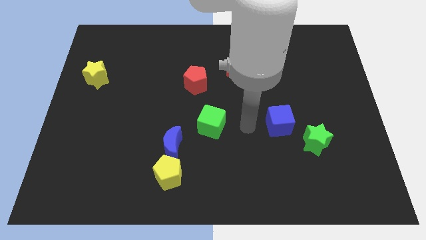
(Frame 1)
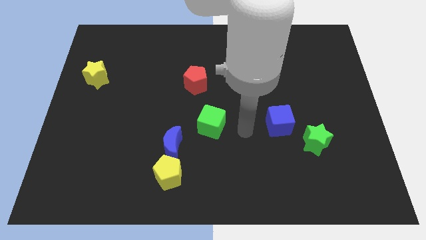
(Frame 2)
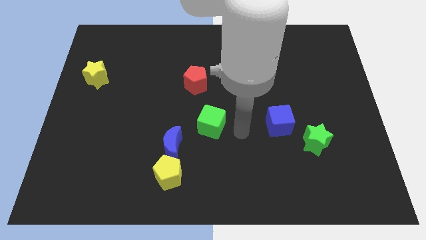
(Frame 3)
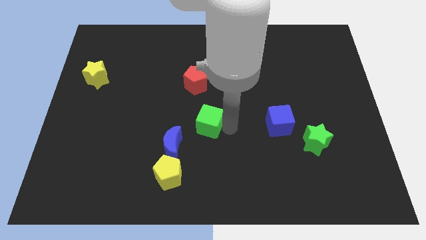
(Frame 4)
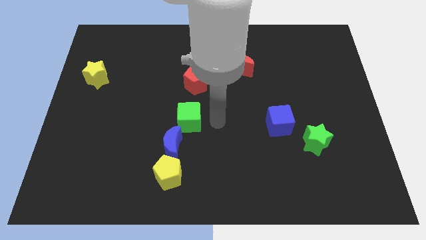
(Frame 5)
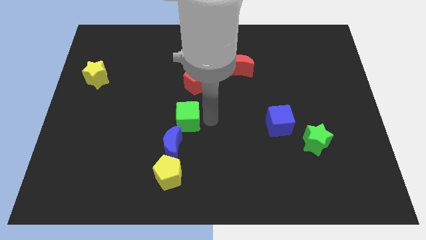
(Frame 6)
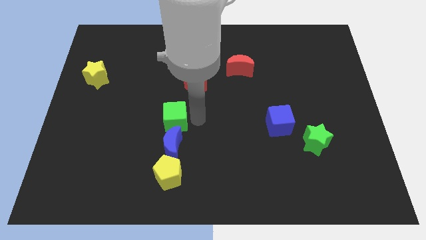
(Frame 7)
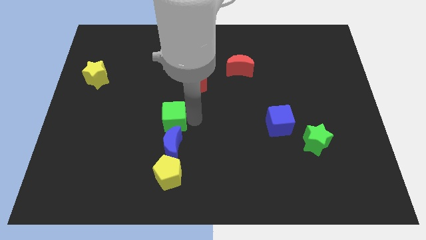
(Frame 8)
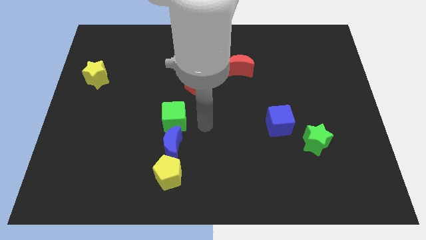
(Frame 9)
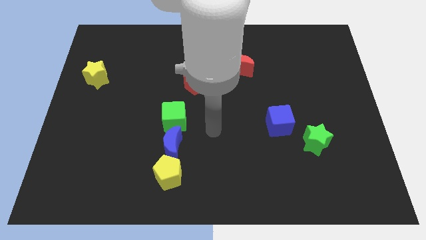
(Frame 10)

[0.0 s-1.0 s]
place the green cube at the top of blue moon

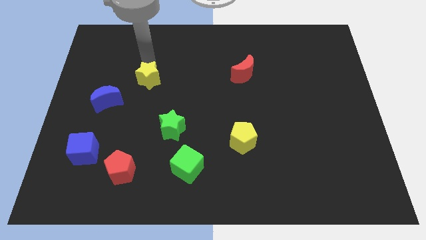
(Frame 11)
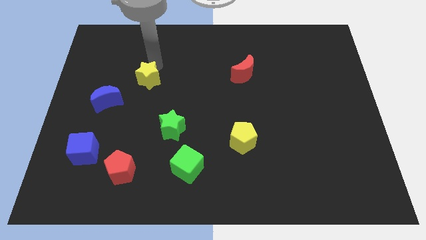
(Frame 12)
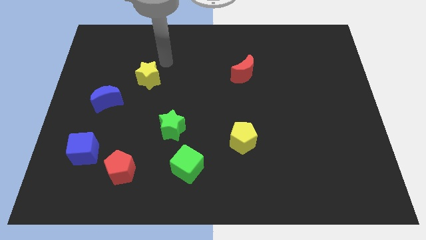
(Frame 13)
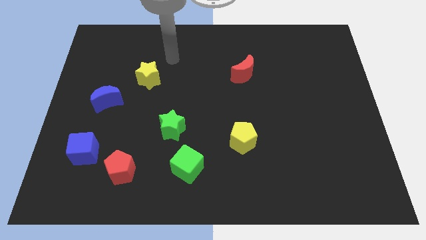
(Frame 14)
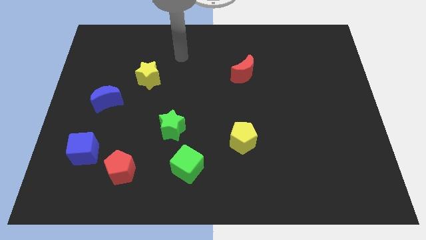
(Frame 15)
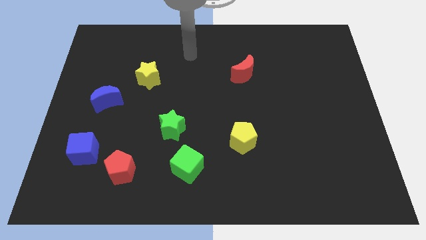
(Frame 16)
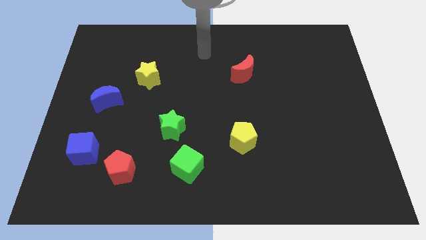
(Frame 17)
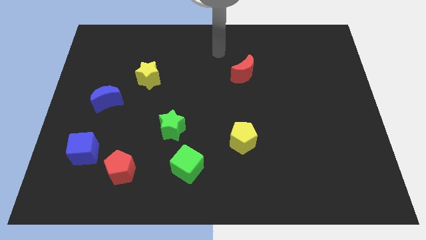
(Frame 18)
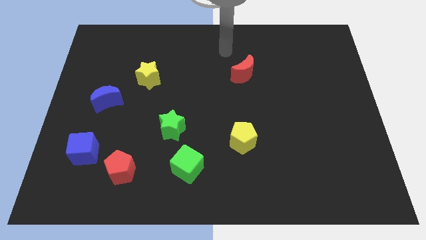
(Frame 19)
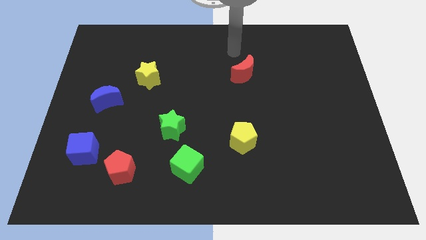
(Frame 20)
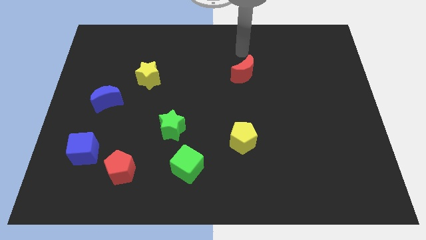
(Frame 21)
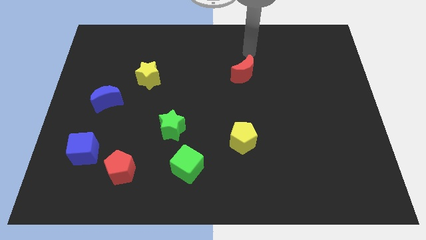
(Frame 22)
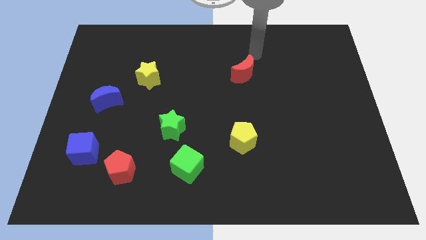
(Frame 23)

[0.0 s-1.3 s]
go near red moon

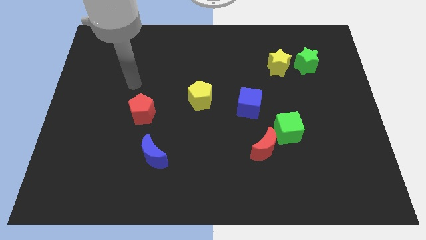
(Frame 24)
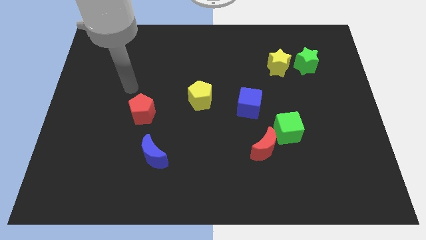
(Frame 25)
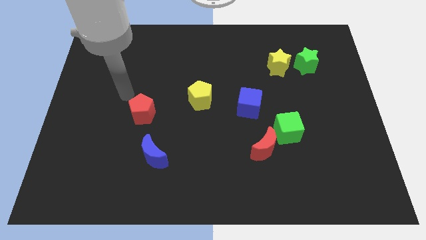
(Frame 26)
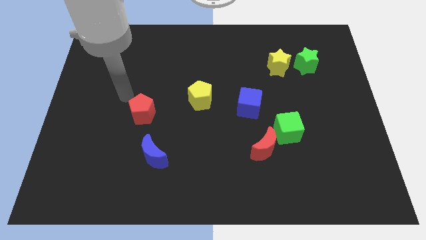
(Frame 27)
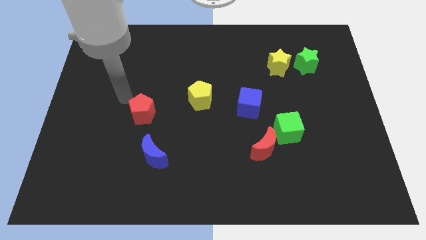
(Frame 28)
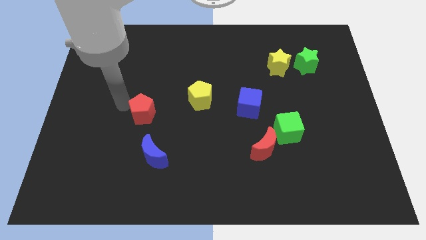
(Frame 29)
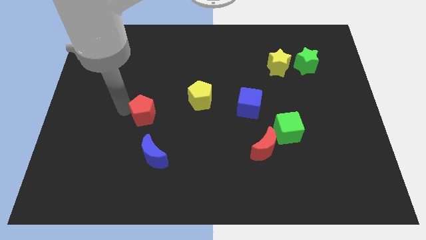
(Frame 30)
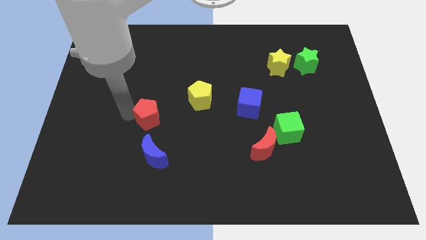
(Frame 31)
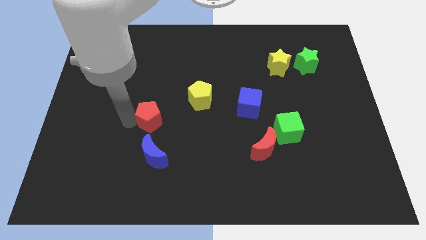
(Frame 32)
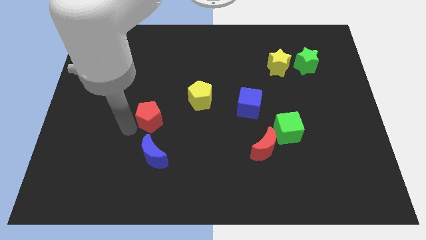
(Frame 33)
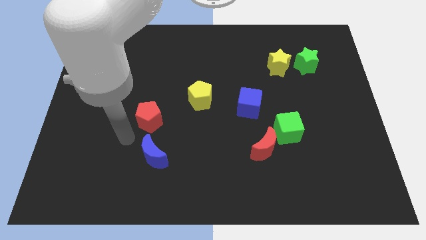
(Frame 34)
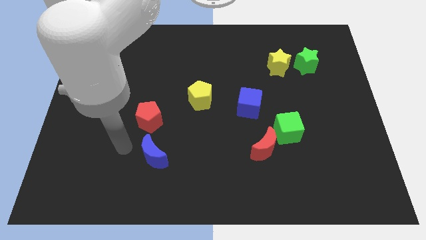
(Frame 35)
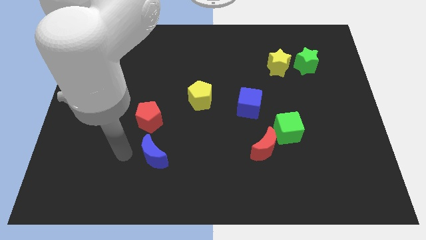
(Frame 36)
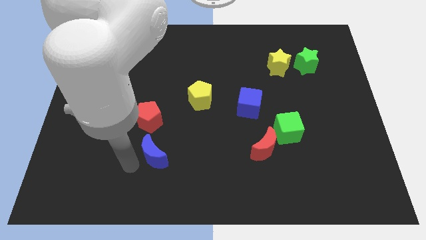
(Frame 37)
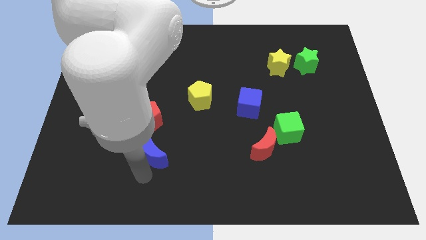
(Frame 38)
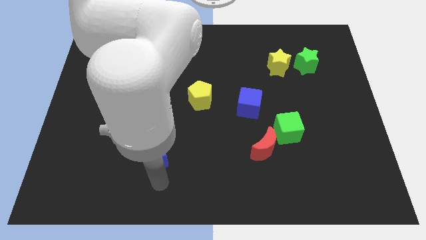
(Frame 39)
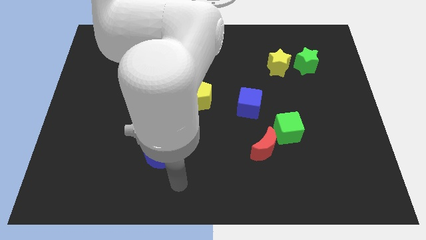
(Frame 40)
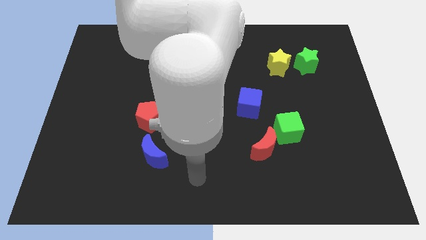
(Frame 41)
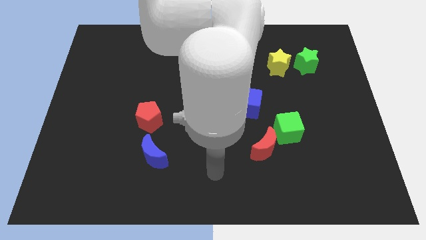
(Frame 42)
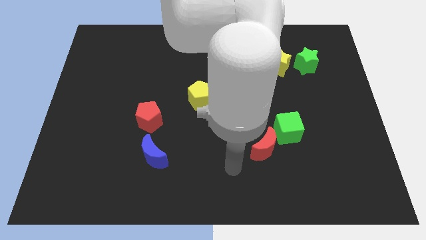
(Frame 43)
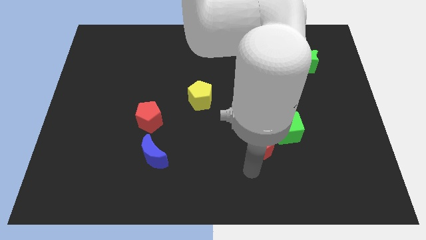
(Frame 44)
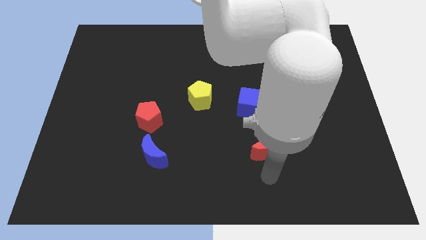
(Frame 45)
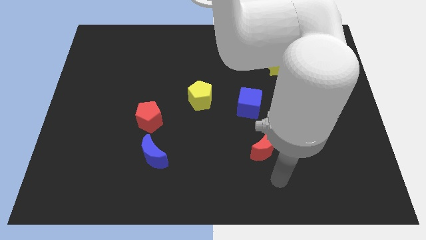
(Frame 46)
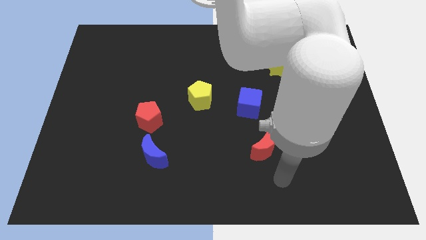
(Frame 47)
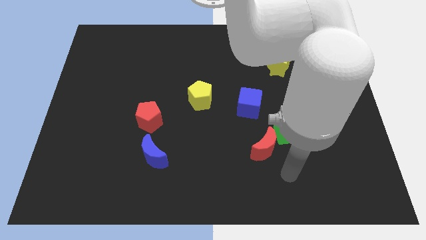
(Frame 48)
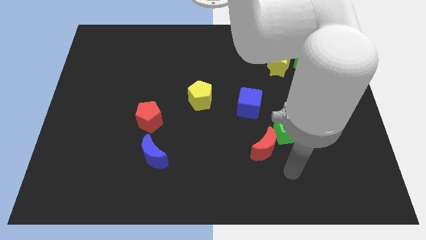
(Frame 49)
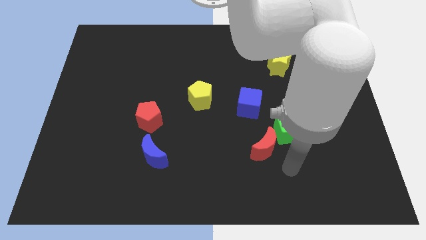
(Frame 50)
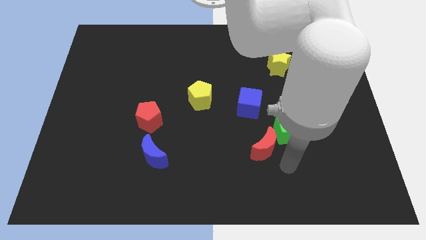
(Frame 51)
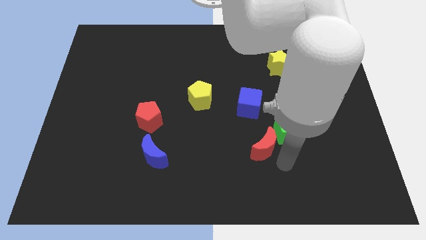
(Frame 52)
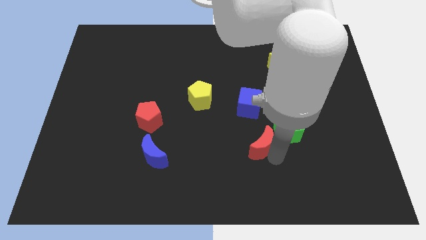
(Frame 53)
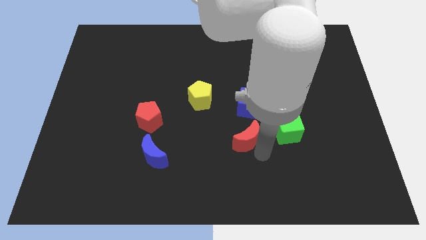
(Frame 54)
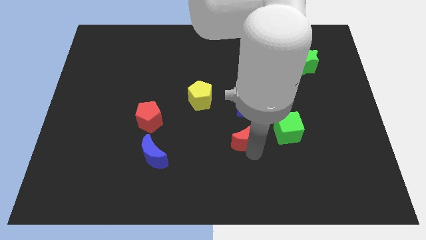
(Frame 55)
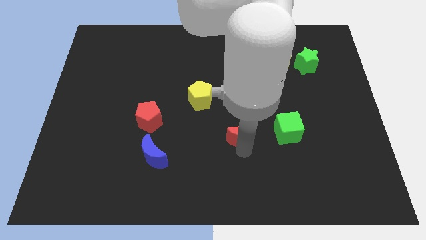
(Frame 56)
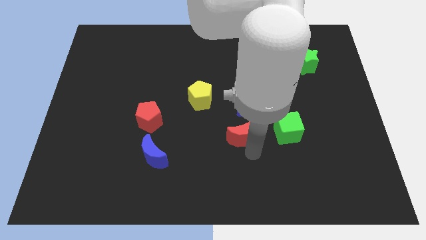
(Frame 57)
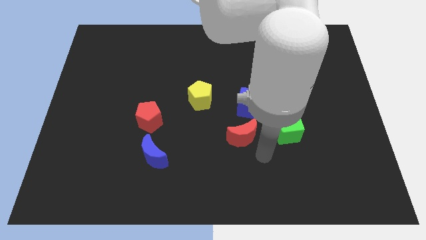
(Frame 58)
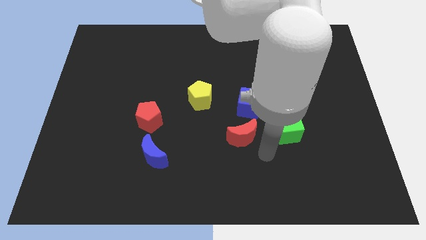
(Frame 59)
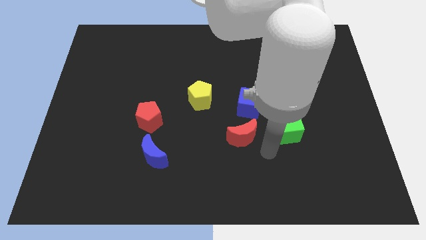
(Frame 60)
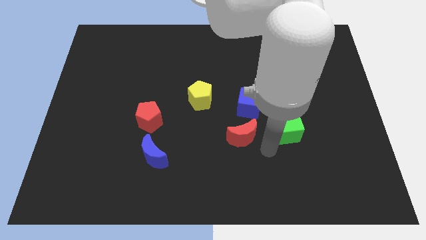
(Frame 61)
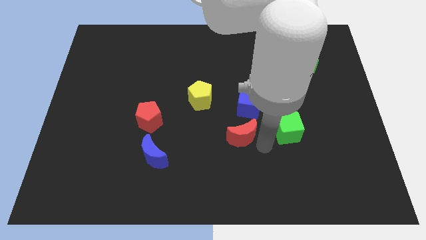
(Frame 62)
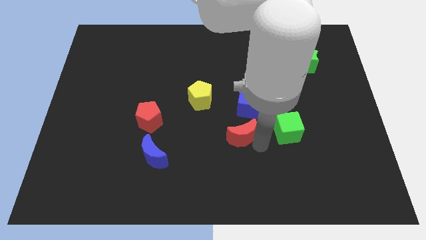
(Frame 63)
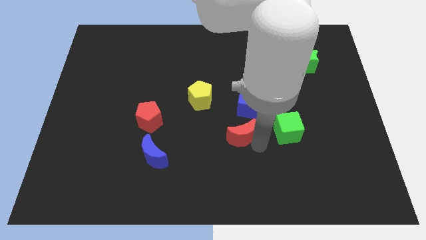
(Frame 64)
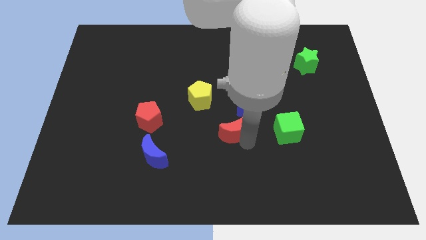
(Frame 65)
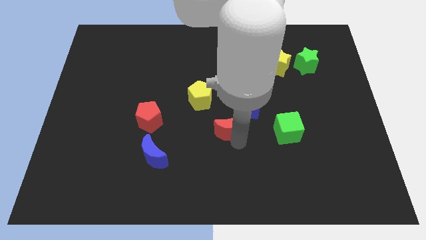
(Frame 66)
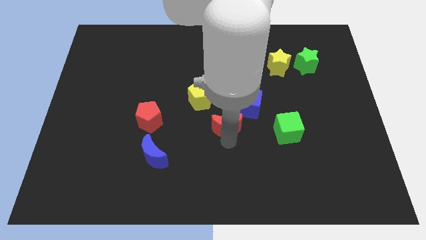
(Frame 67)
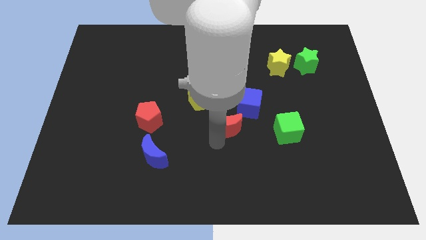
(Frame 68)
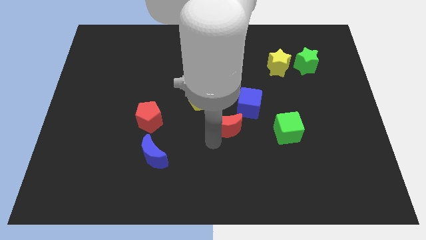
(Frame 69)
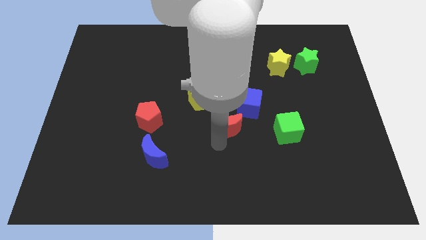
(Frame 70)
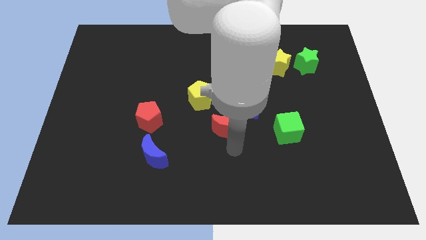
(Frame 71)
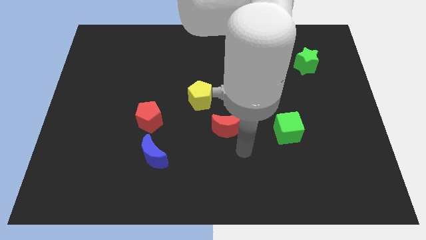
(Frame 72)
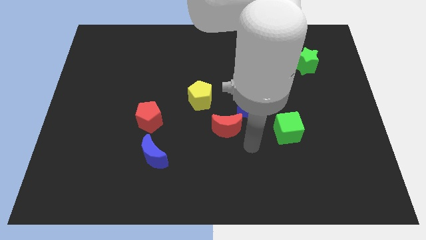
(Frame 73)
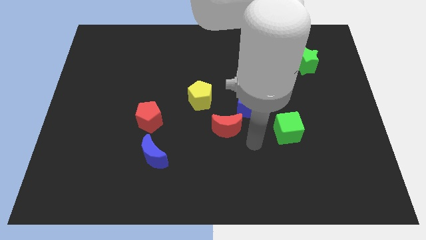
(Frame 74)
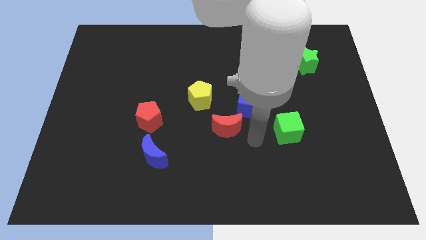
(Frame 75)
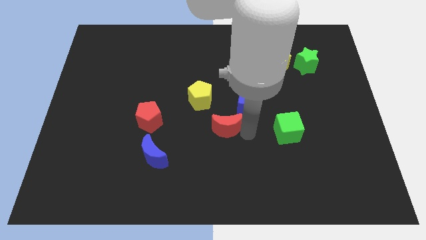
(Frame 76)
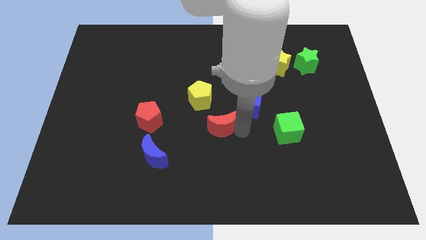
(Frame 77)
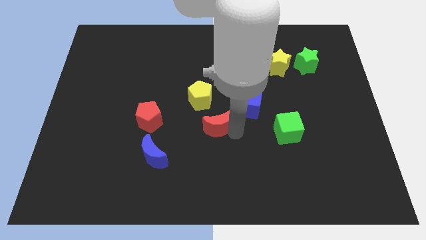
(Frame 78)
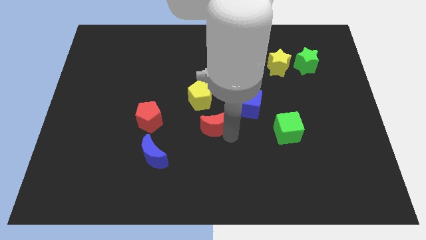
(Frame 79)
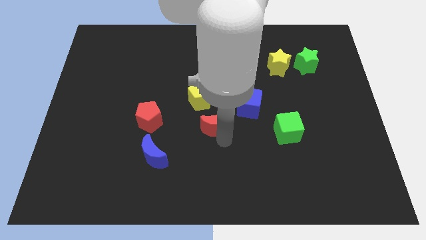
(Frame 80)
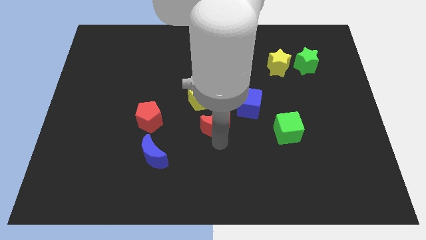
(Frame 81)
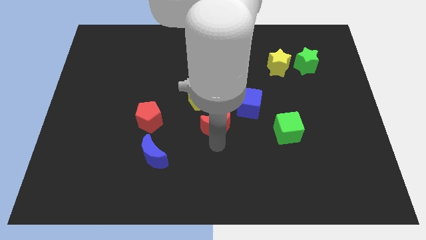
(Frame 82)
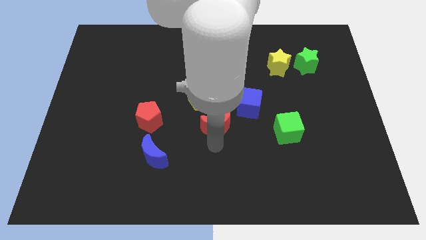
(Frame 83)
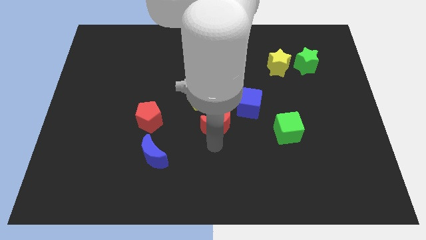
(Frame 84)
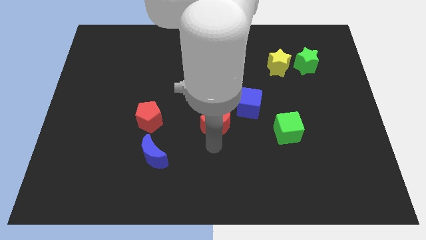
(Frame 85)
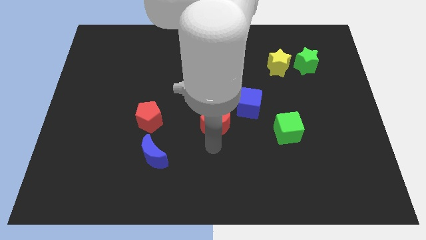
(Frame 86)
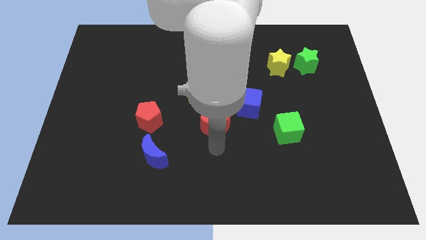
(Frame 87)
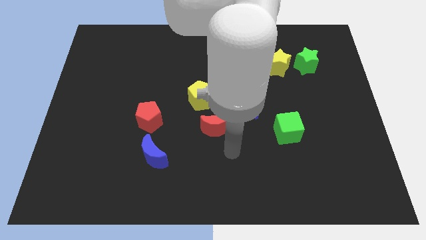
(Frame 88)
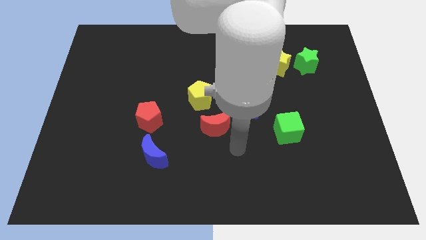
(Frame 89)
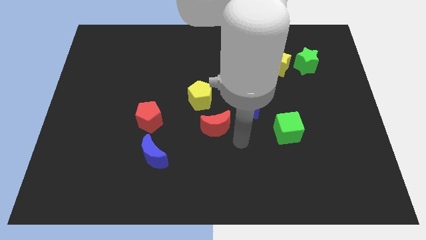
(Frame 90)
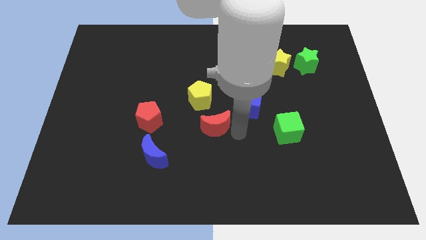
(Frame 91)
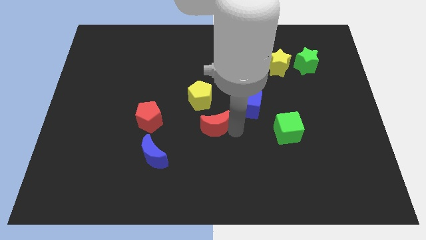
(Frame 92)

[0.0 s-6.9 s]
place the red crescent to the bottom right of the yellow pentagon
